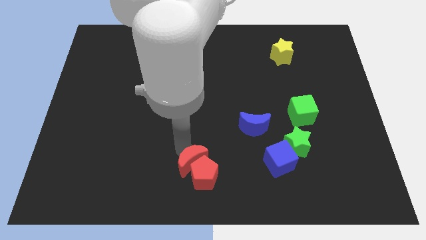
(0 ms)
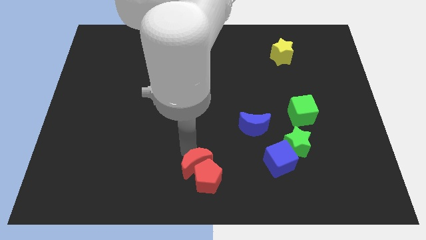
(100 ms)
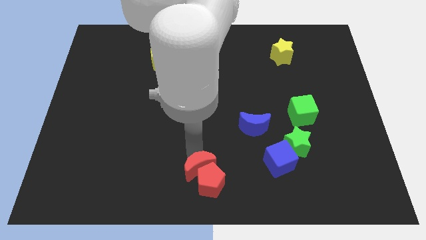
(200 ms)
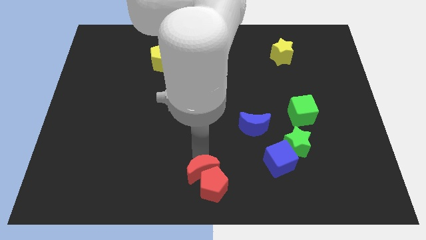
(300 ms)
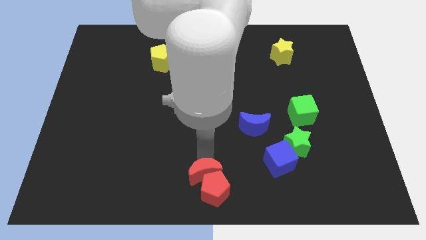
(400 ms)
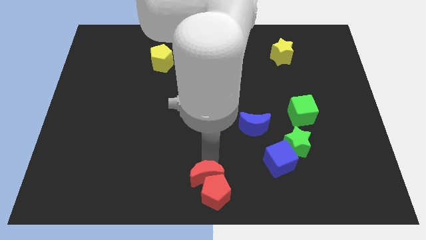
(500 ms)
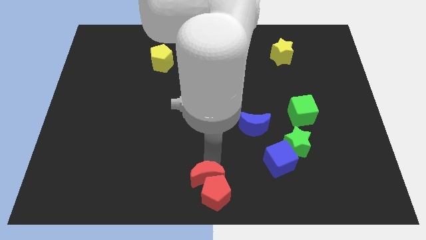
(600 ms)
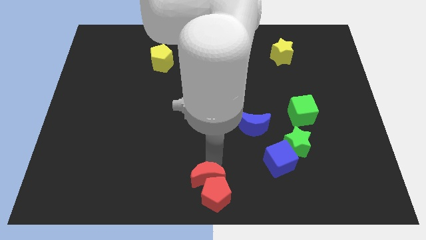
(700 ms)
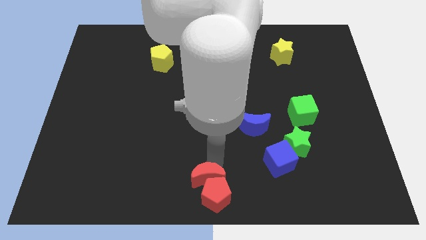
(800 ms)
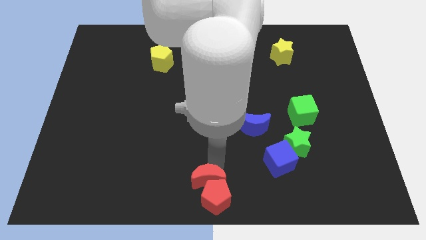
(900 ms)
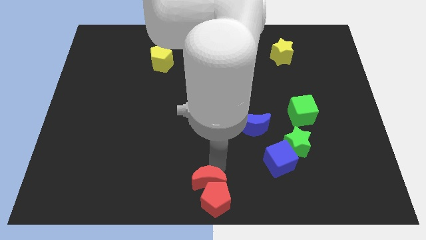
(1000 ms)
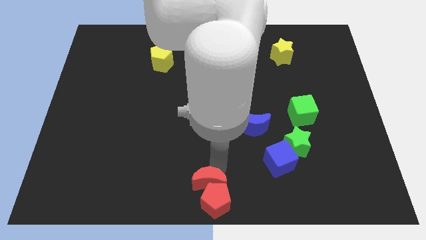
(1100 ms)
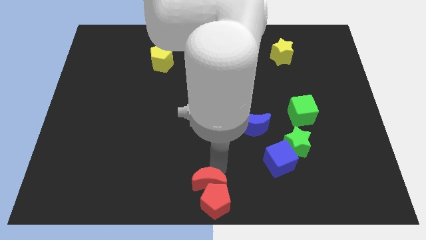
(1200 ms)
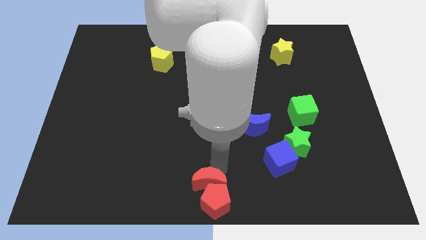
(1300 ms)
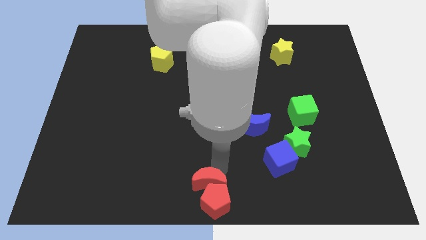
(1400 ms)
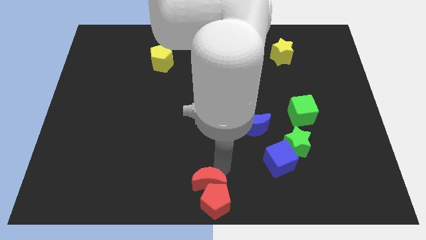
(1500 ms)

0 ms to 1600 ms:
move the red crescent along with the red pentagon to the bottom center of the board

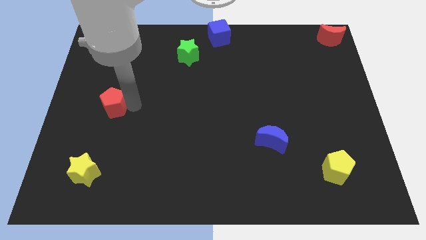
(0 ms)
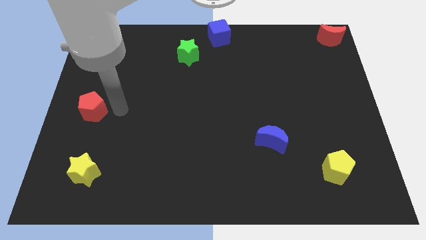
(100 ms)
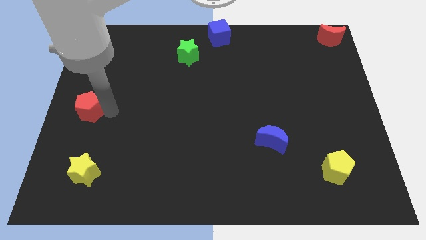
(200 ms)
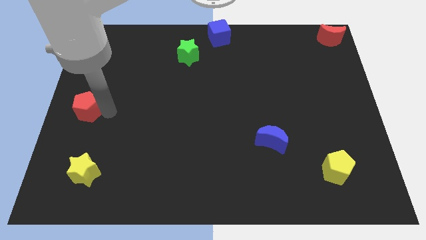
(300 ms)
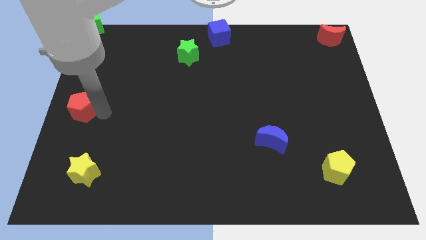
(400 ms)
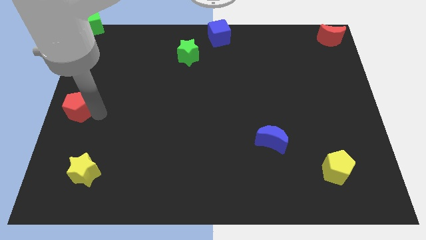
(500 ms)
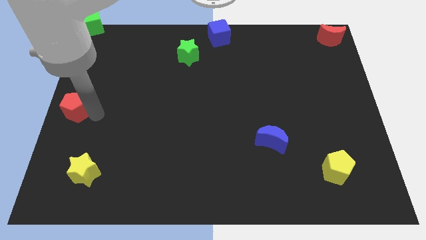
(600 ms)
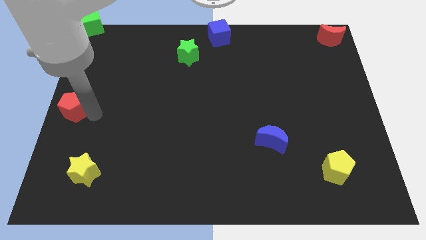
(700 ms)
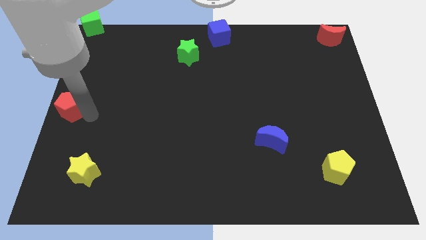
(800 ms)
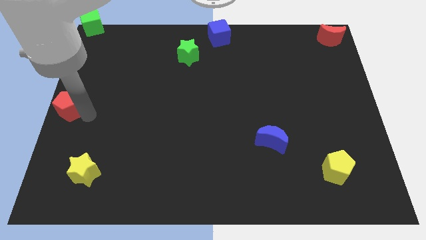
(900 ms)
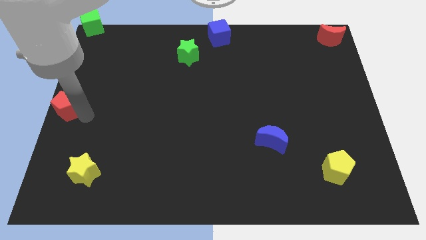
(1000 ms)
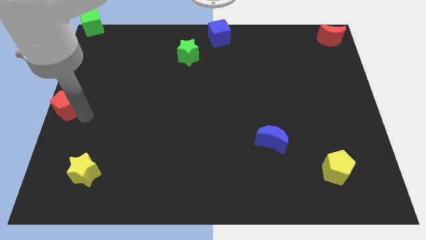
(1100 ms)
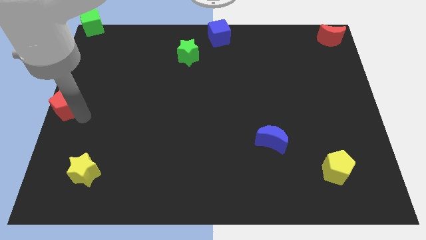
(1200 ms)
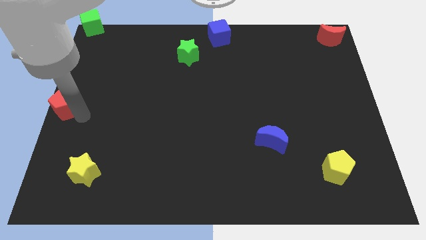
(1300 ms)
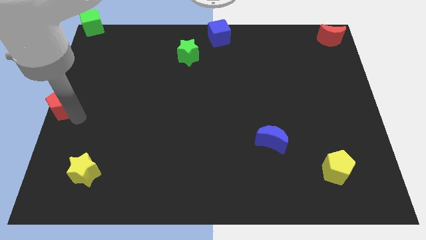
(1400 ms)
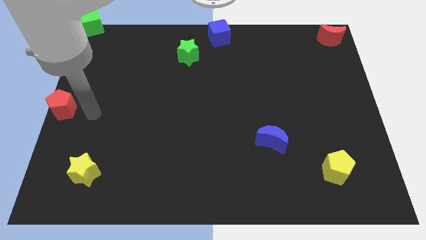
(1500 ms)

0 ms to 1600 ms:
slide the red pentagon to the center left of the board

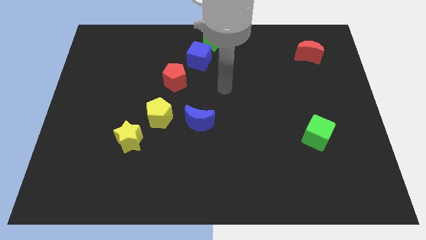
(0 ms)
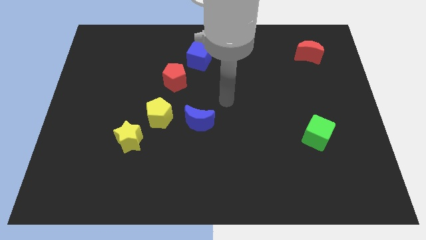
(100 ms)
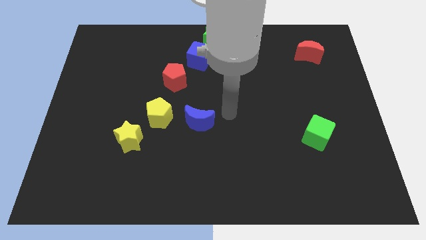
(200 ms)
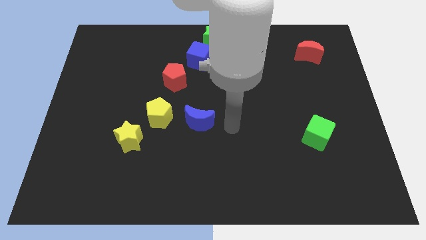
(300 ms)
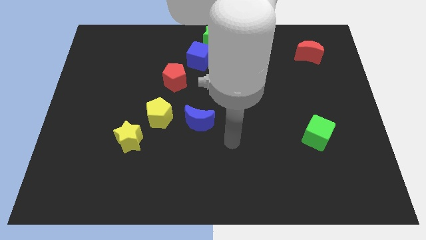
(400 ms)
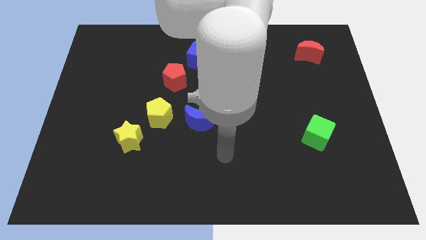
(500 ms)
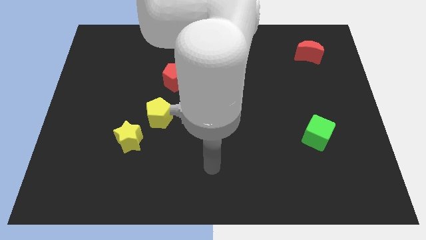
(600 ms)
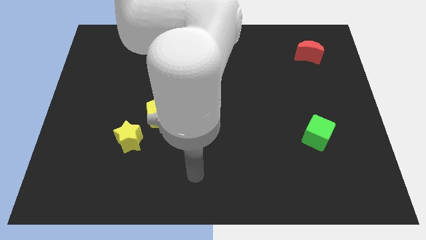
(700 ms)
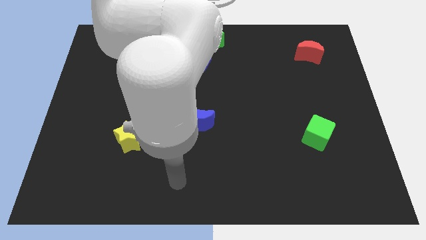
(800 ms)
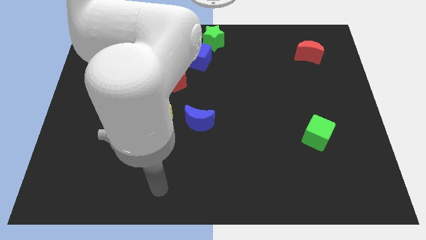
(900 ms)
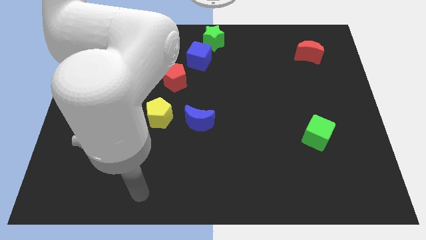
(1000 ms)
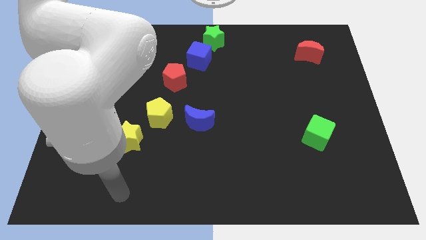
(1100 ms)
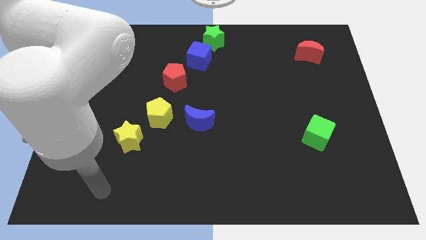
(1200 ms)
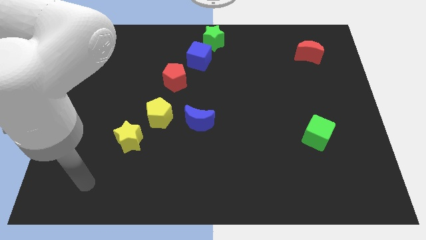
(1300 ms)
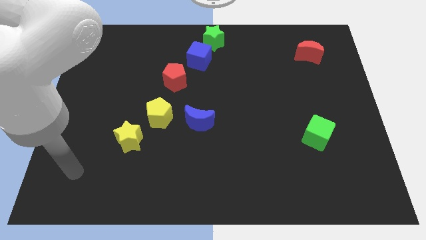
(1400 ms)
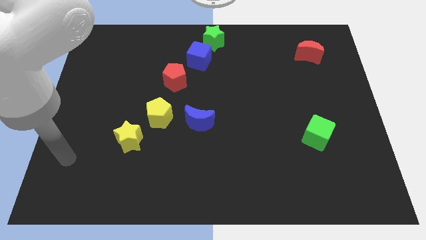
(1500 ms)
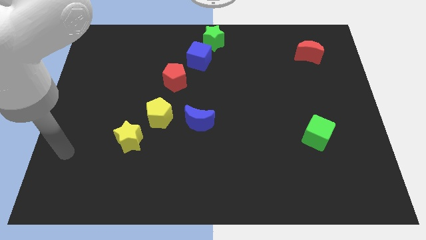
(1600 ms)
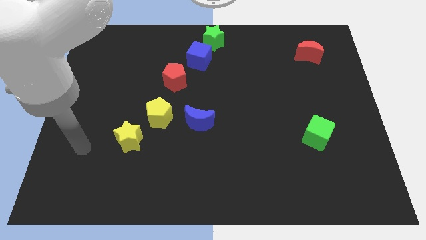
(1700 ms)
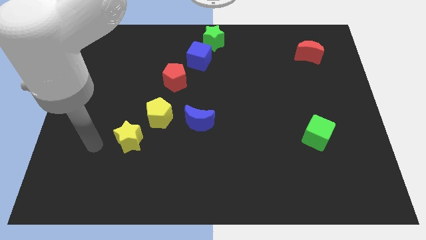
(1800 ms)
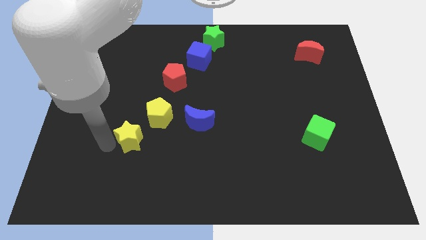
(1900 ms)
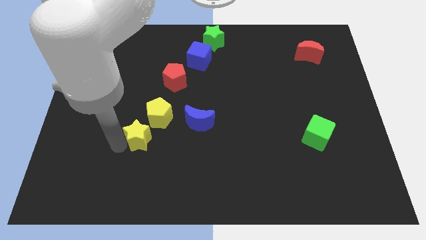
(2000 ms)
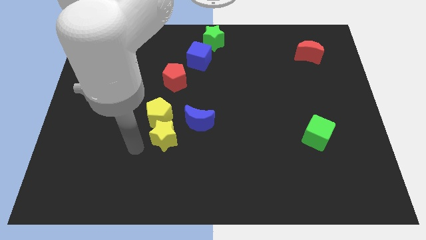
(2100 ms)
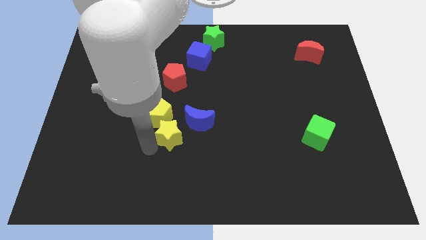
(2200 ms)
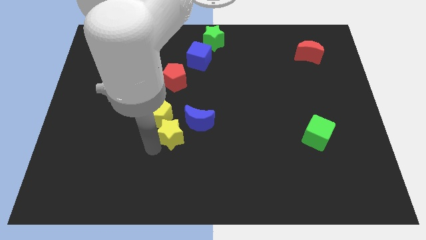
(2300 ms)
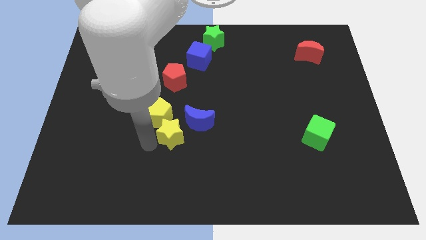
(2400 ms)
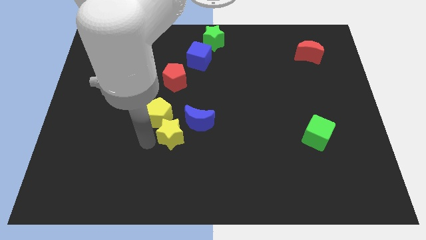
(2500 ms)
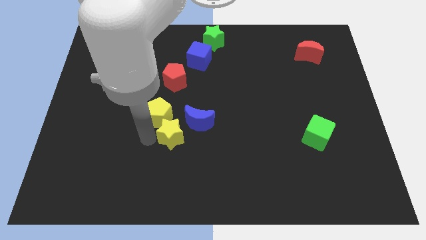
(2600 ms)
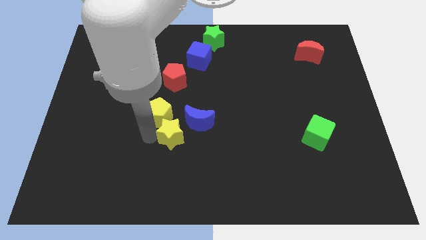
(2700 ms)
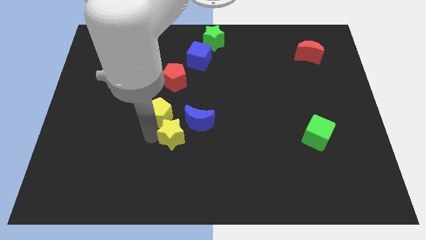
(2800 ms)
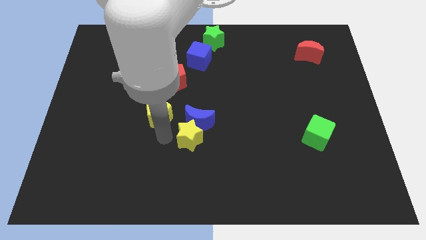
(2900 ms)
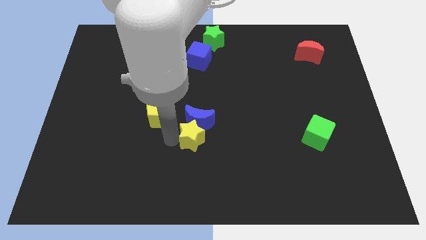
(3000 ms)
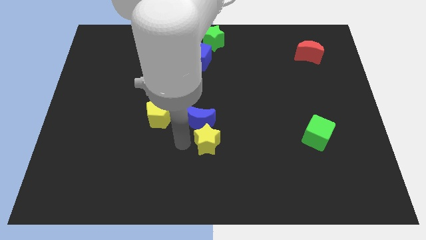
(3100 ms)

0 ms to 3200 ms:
push the yellow star to the bottom side of the blue crescent

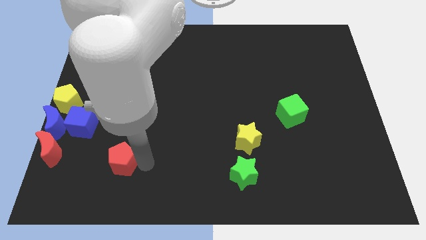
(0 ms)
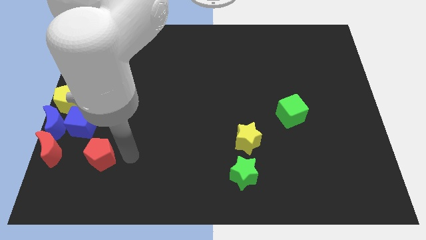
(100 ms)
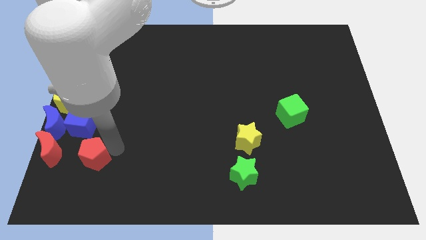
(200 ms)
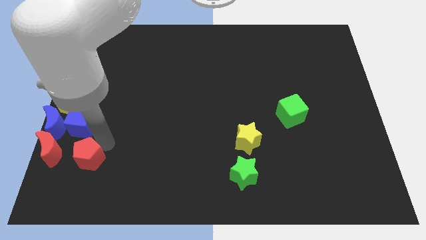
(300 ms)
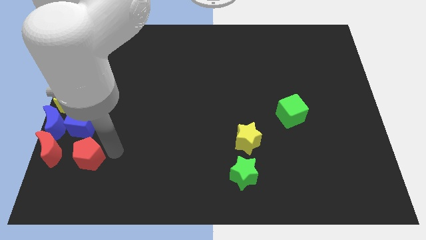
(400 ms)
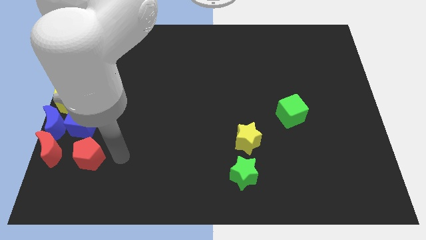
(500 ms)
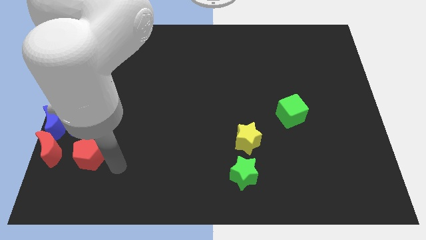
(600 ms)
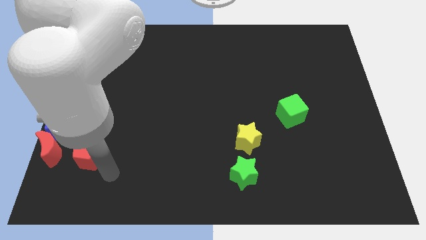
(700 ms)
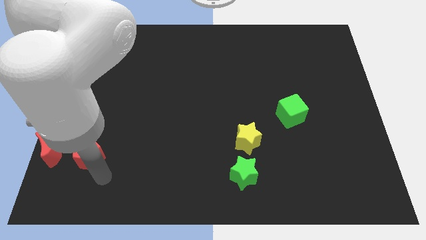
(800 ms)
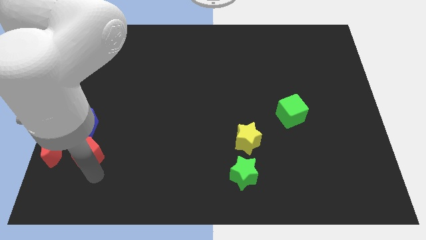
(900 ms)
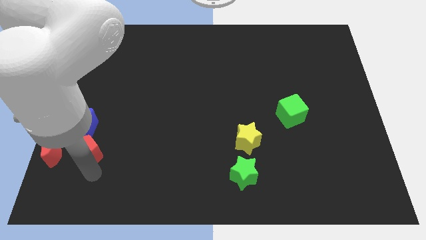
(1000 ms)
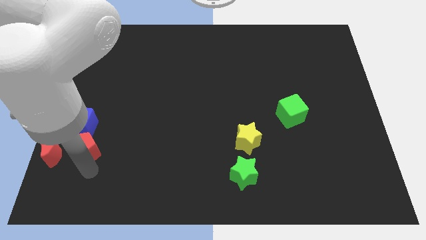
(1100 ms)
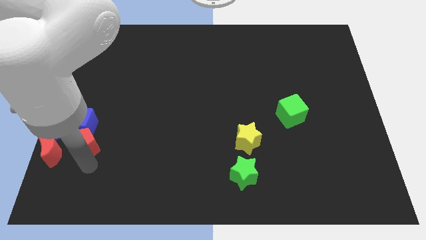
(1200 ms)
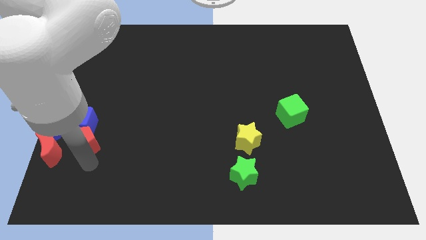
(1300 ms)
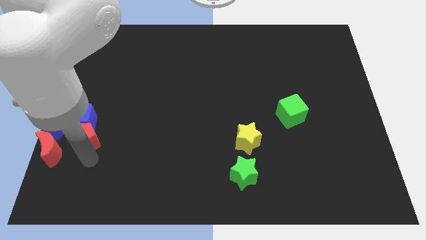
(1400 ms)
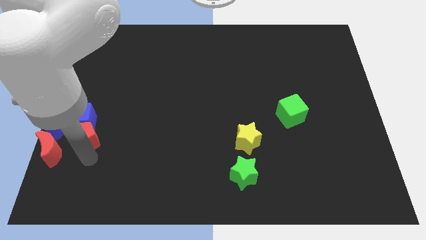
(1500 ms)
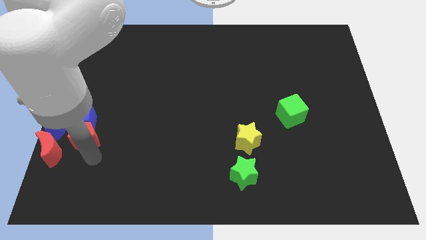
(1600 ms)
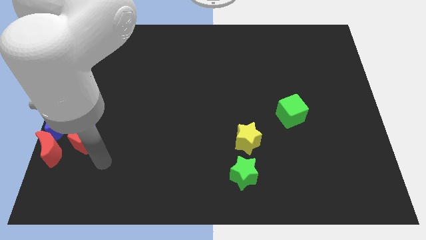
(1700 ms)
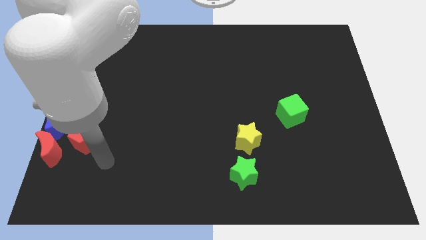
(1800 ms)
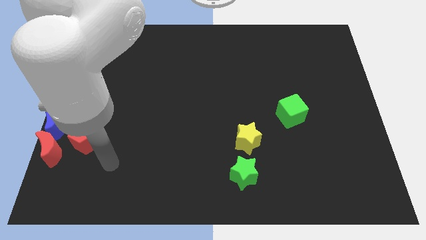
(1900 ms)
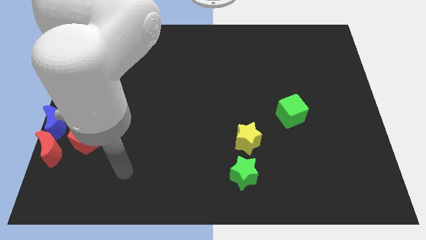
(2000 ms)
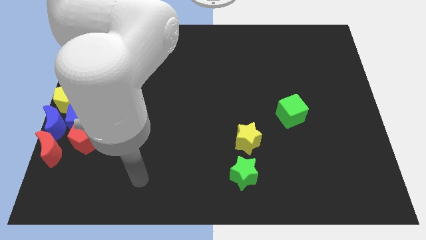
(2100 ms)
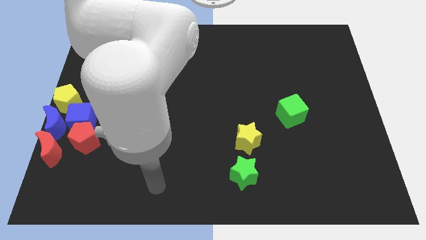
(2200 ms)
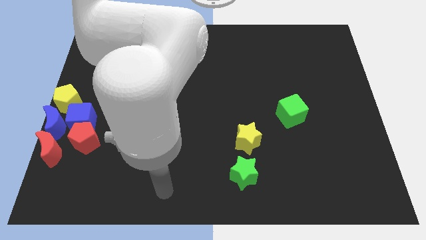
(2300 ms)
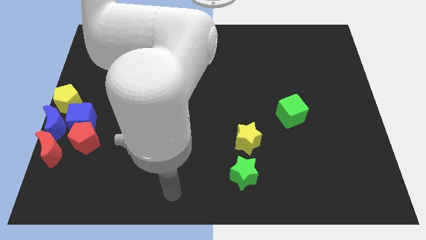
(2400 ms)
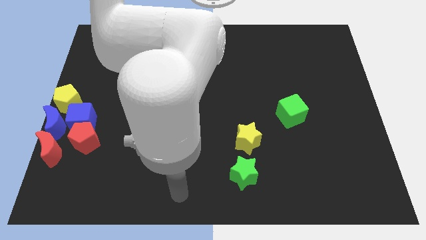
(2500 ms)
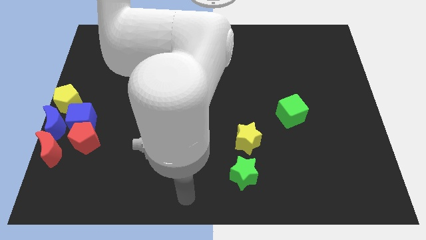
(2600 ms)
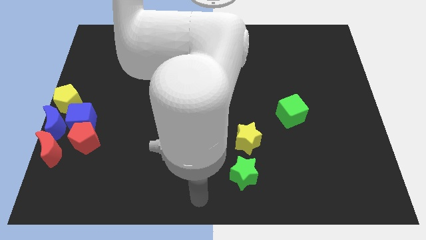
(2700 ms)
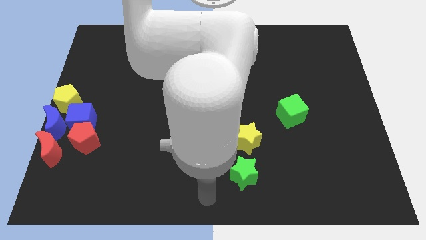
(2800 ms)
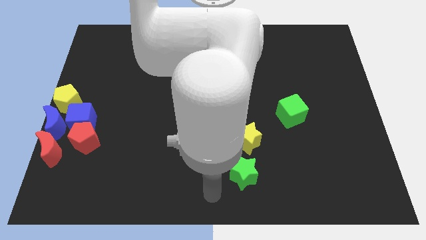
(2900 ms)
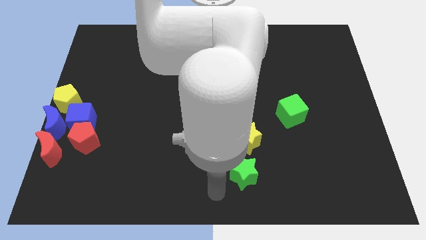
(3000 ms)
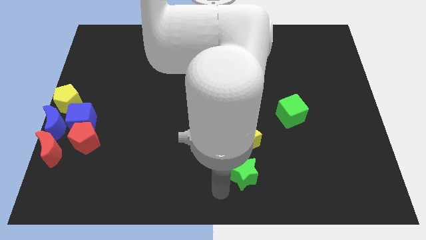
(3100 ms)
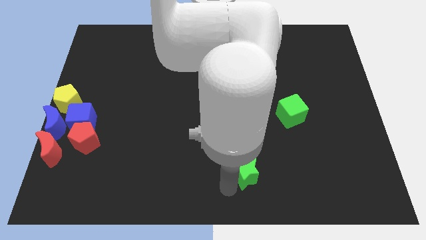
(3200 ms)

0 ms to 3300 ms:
push the red pentagon to the right of the red crescent
